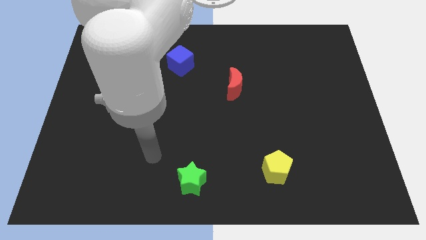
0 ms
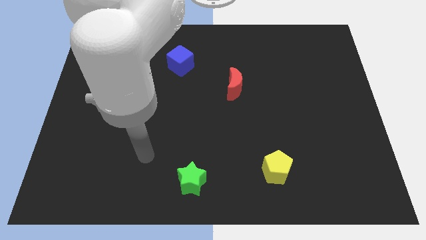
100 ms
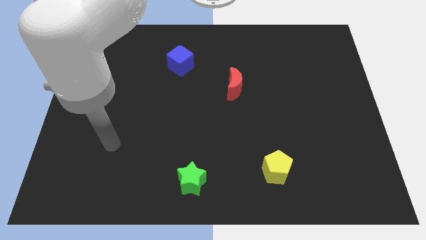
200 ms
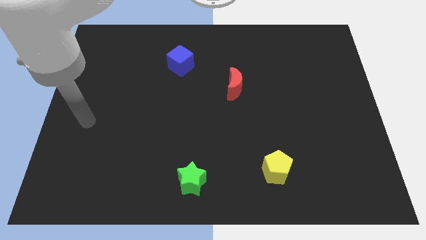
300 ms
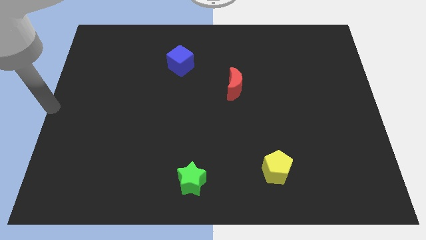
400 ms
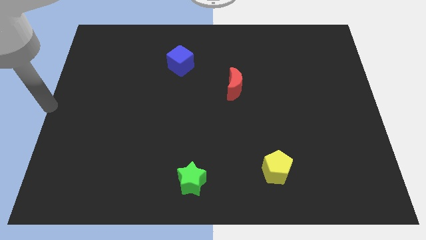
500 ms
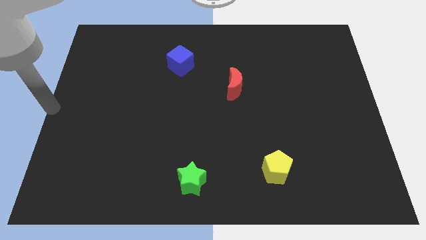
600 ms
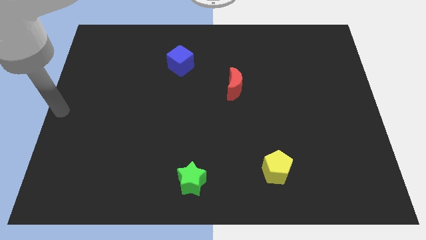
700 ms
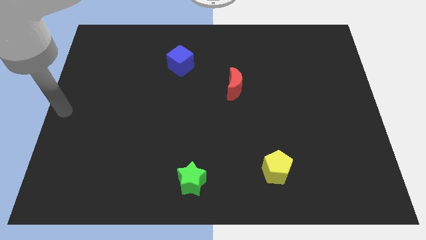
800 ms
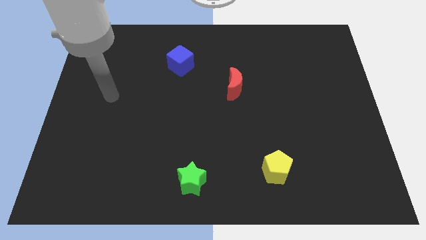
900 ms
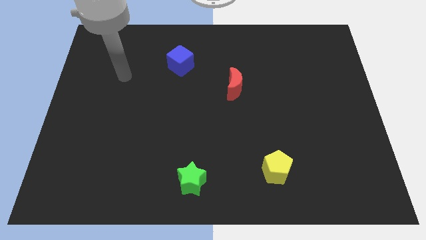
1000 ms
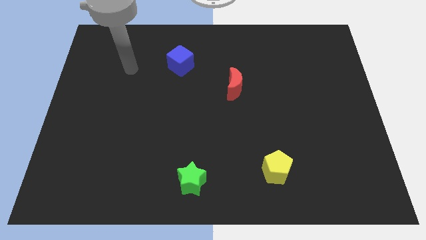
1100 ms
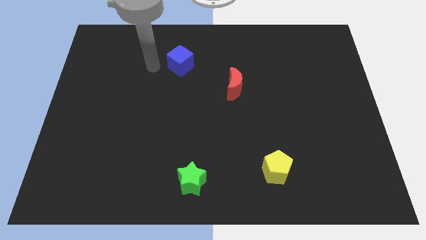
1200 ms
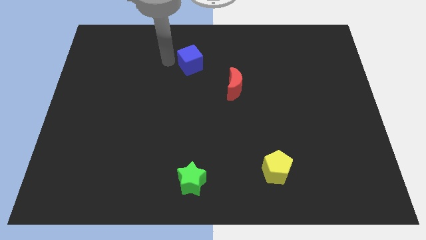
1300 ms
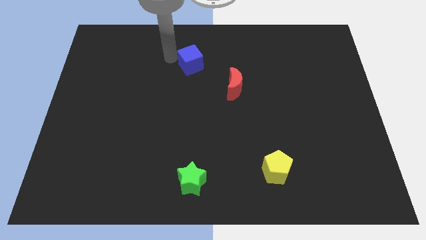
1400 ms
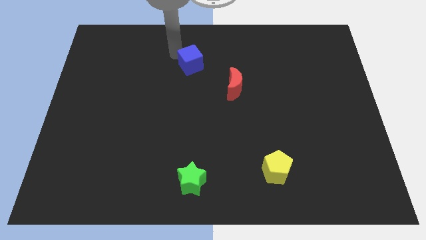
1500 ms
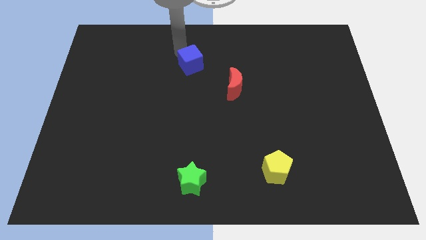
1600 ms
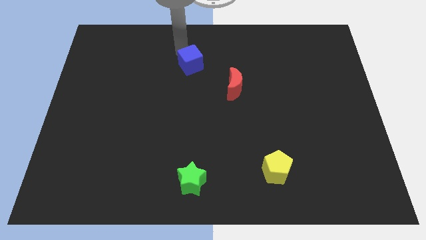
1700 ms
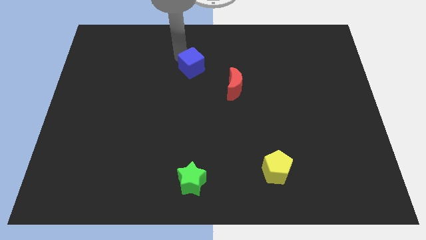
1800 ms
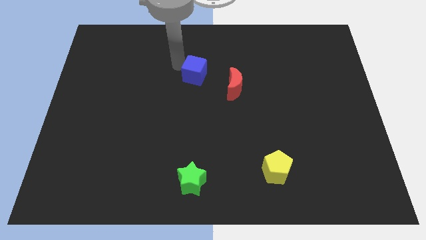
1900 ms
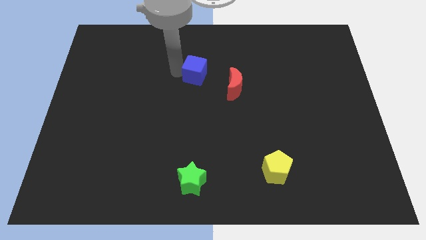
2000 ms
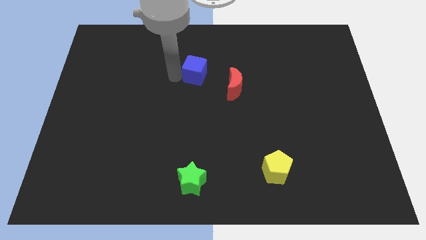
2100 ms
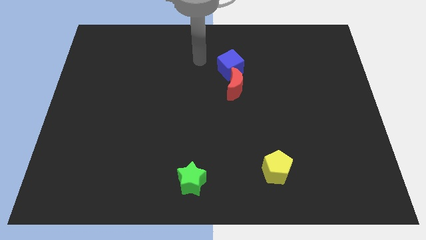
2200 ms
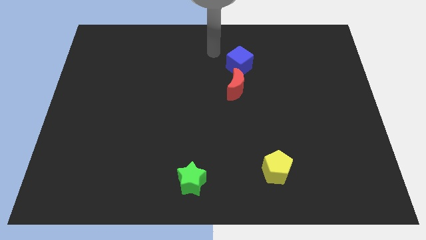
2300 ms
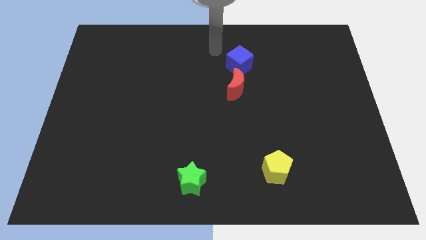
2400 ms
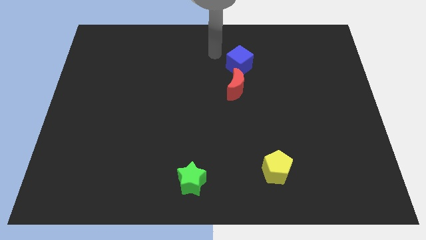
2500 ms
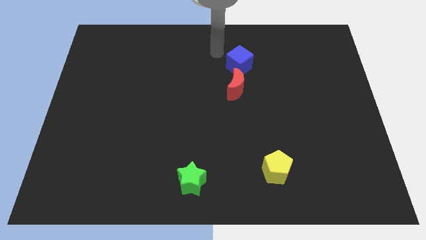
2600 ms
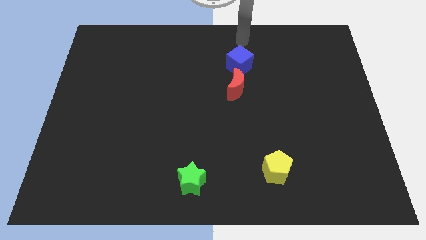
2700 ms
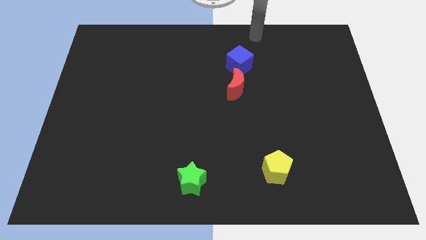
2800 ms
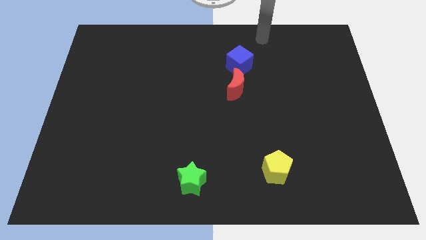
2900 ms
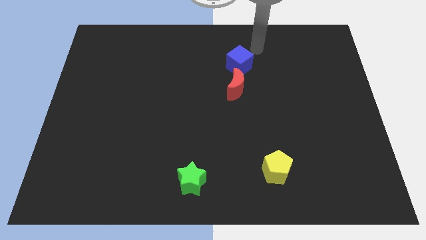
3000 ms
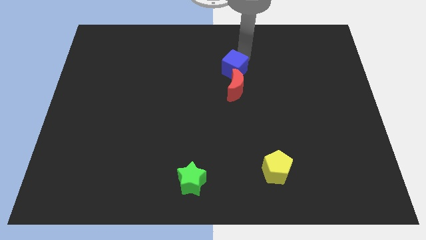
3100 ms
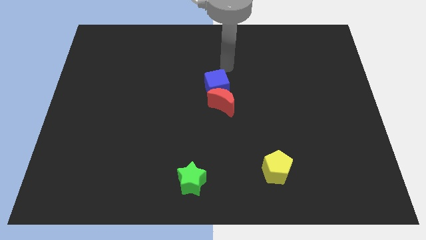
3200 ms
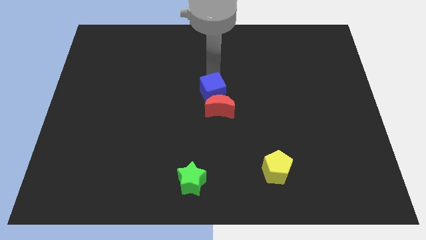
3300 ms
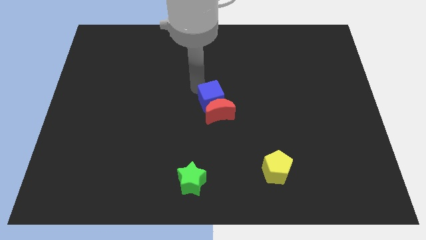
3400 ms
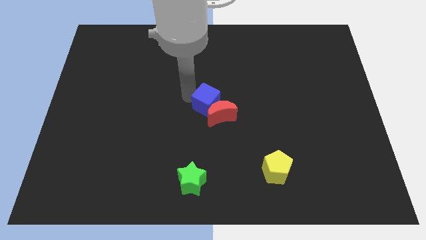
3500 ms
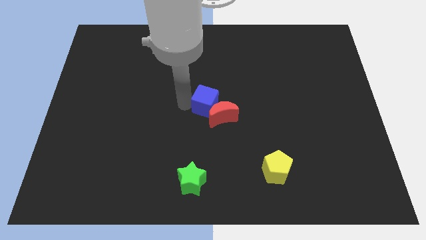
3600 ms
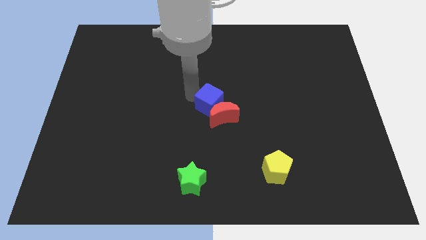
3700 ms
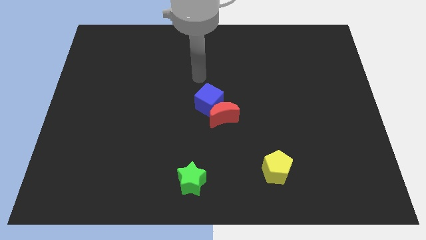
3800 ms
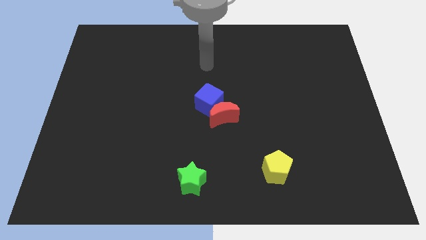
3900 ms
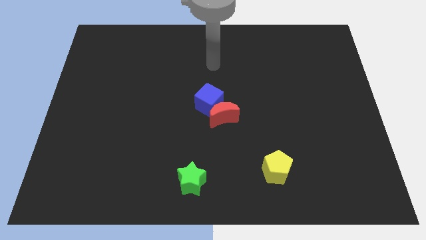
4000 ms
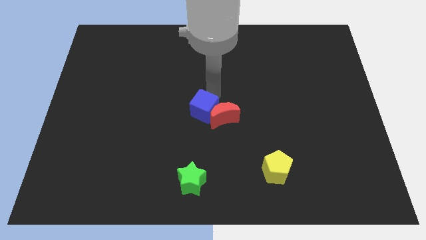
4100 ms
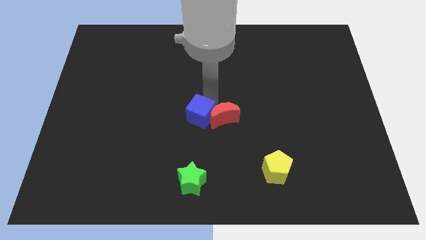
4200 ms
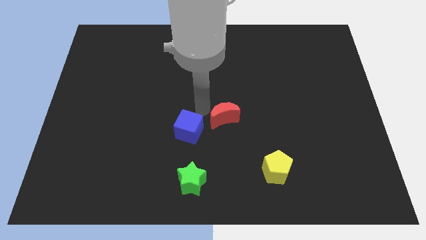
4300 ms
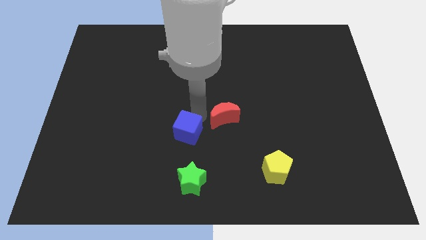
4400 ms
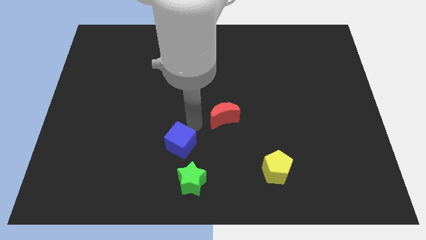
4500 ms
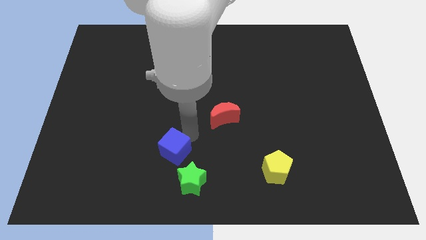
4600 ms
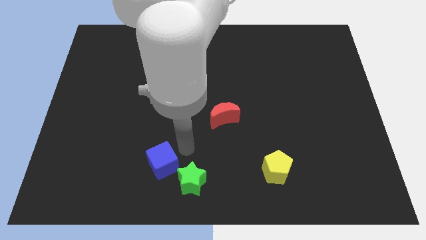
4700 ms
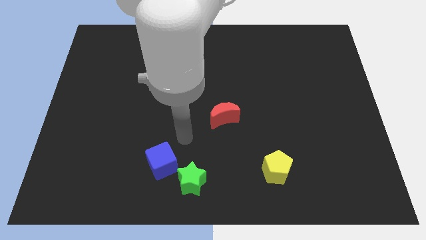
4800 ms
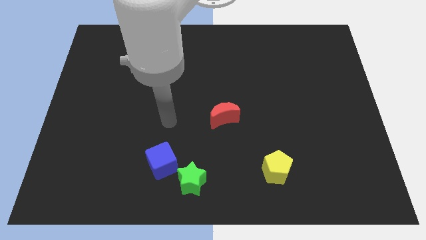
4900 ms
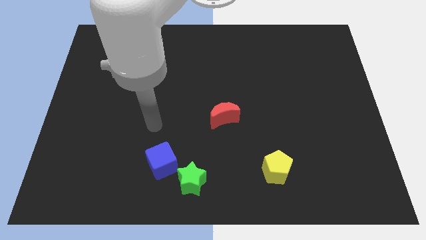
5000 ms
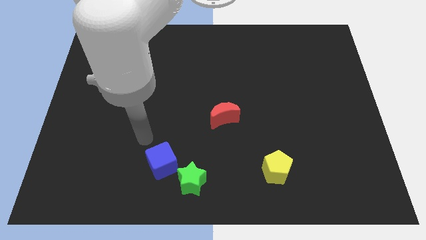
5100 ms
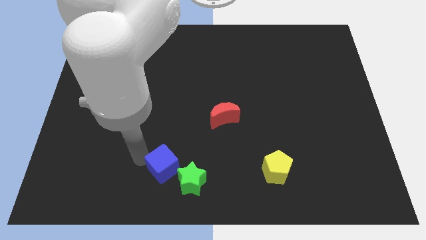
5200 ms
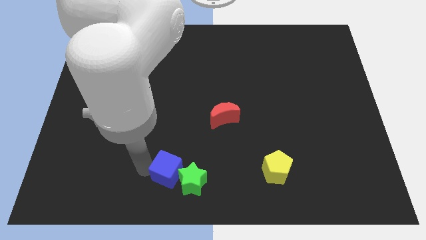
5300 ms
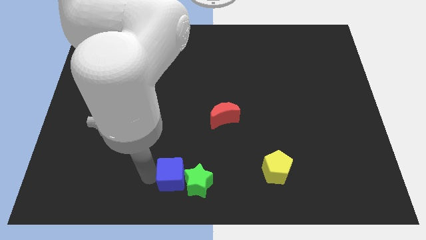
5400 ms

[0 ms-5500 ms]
put the blue cube to the star

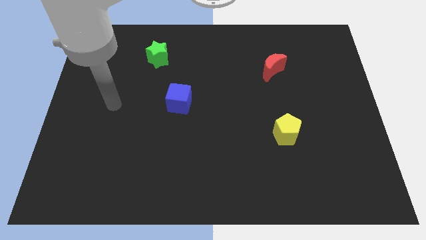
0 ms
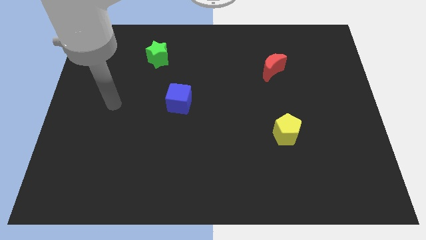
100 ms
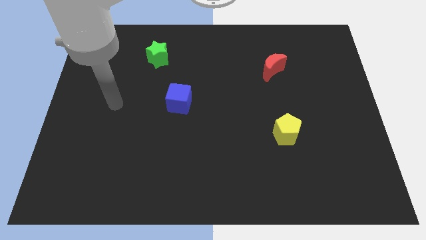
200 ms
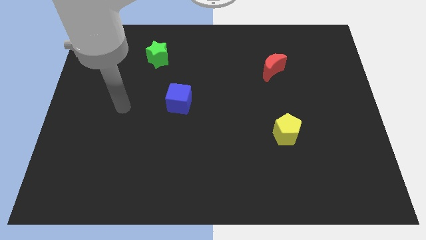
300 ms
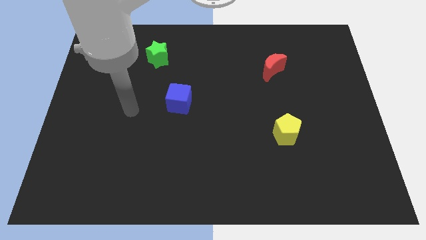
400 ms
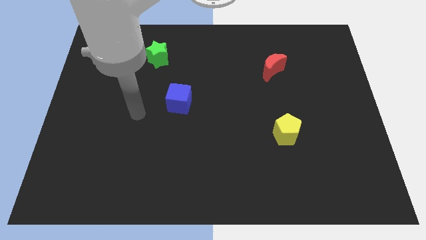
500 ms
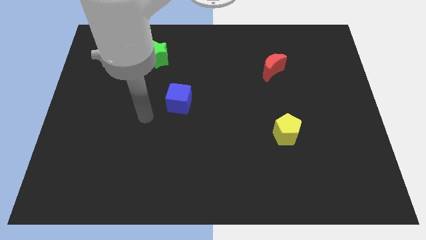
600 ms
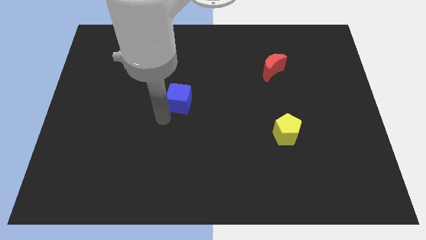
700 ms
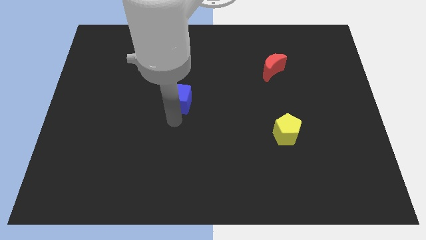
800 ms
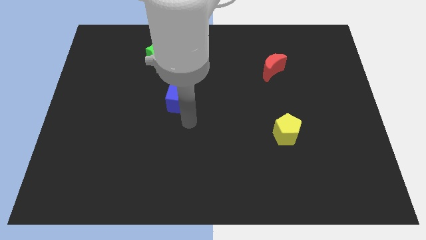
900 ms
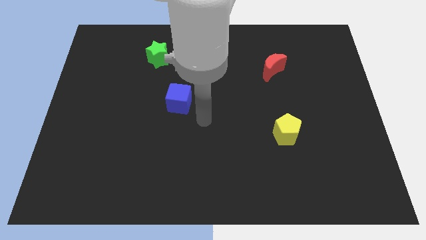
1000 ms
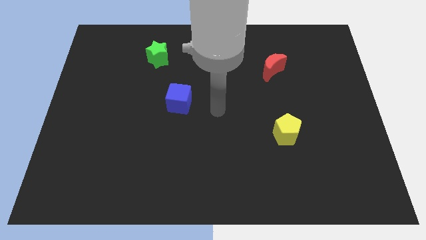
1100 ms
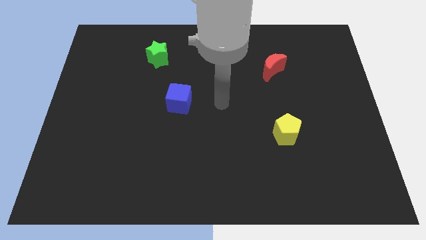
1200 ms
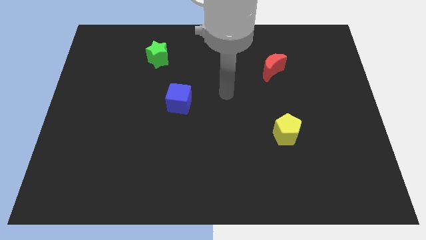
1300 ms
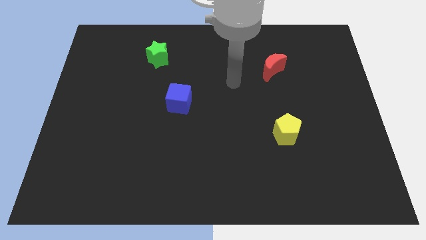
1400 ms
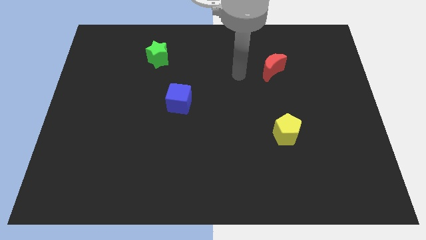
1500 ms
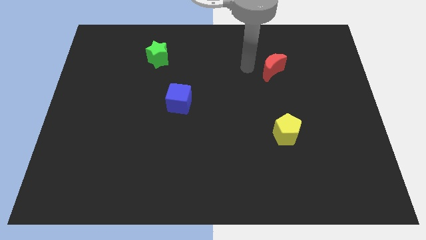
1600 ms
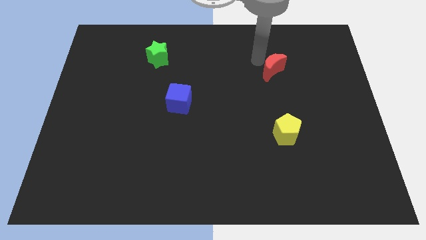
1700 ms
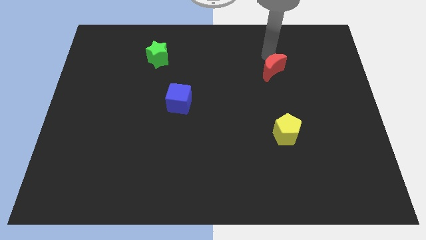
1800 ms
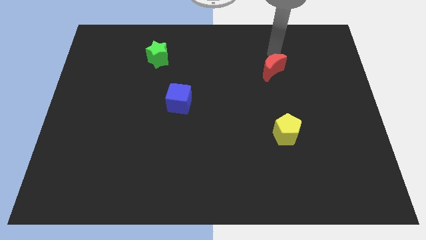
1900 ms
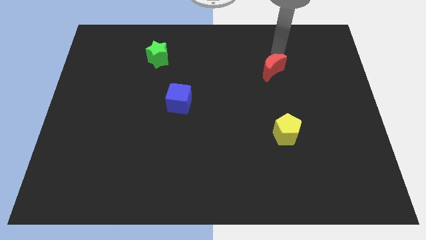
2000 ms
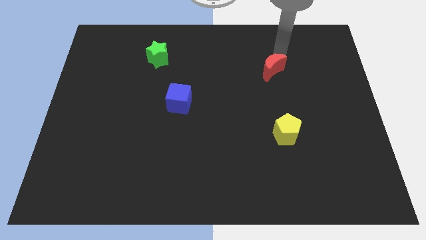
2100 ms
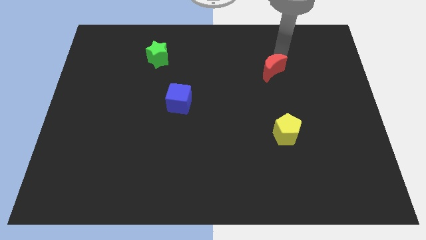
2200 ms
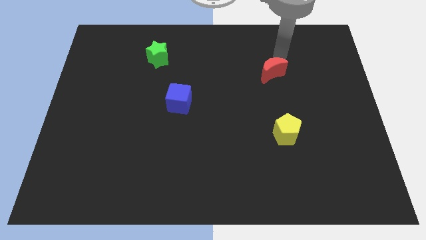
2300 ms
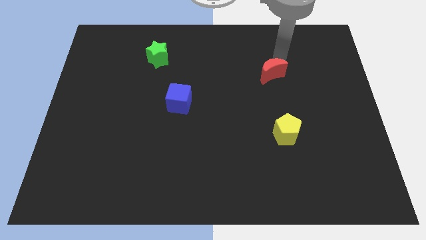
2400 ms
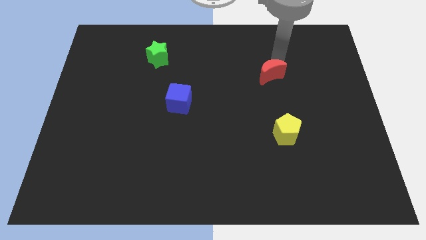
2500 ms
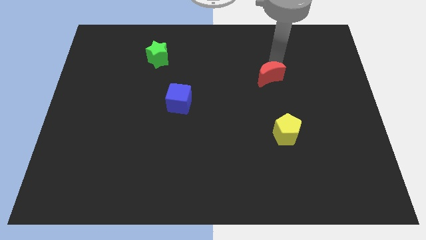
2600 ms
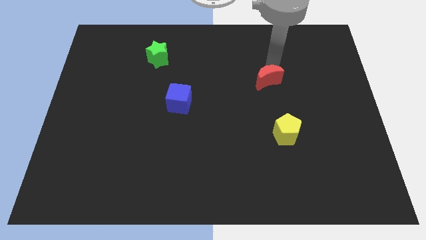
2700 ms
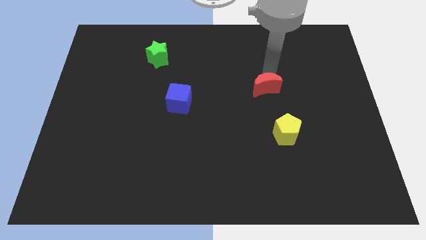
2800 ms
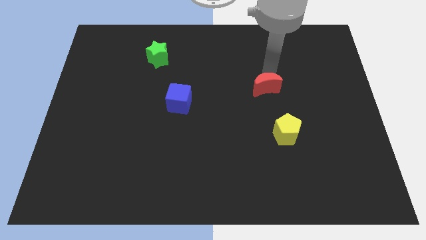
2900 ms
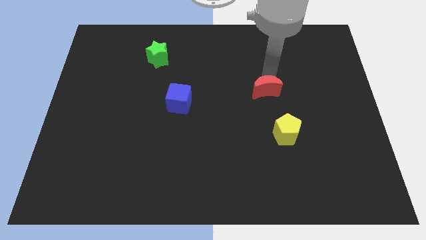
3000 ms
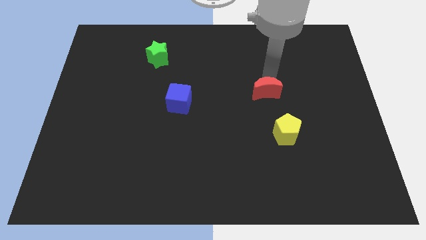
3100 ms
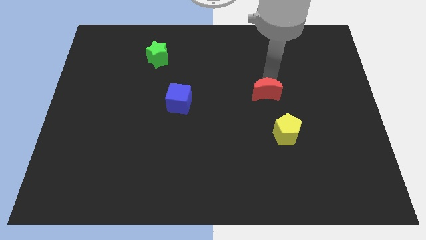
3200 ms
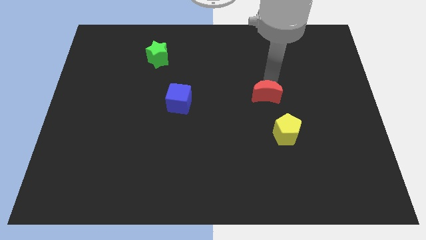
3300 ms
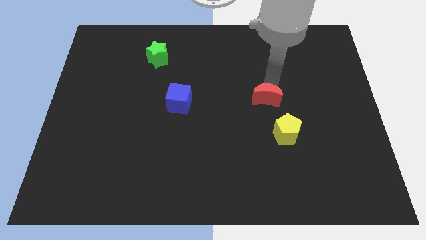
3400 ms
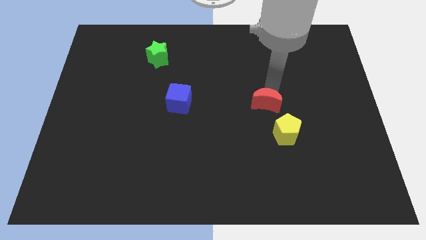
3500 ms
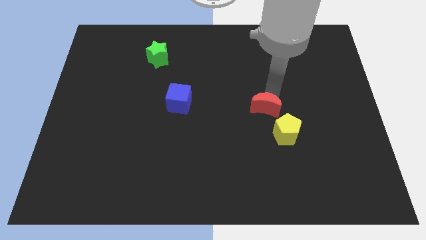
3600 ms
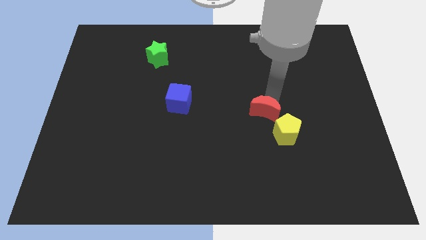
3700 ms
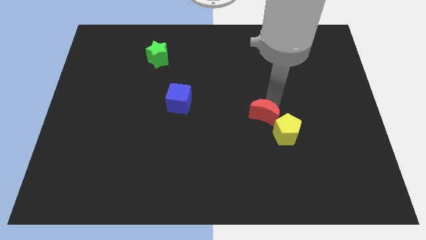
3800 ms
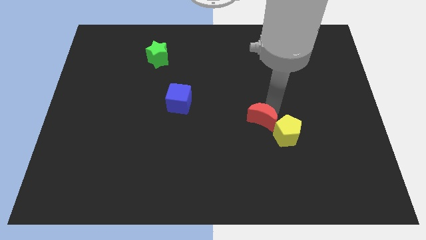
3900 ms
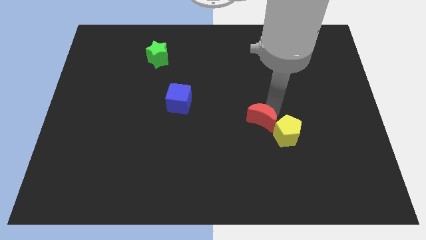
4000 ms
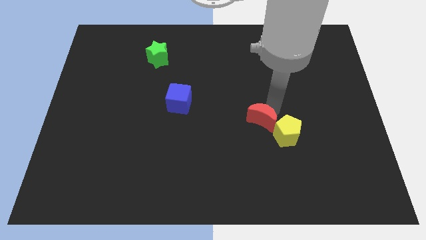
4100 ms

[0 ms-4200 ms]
move the red block towards the pentagon
